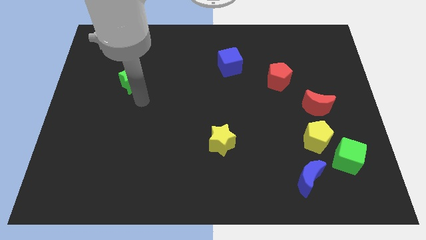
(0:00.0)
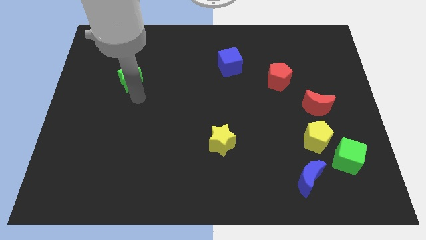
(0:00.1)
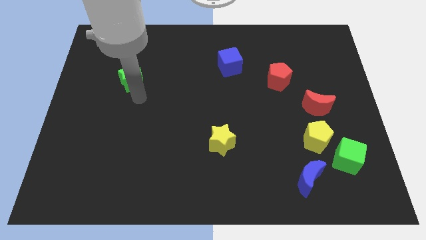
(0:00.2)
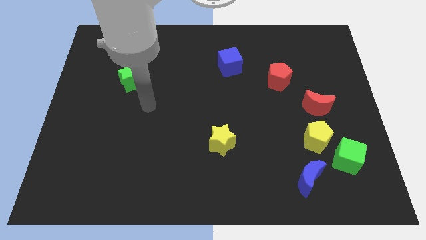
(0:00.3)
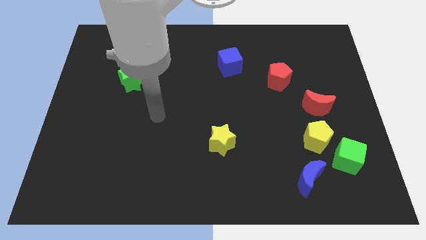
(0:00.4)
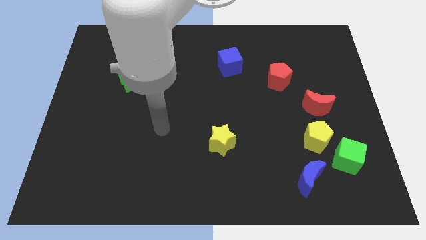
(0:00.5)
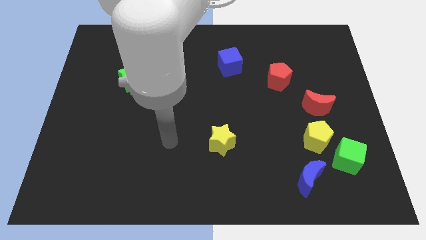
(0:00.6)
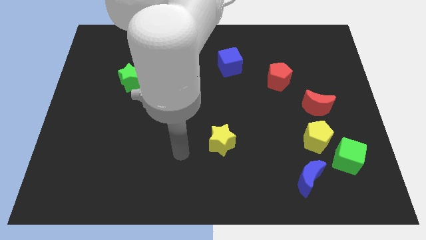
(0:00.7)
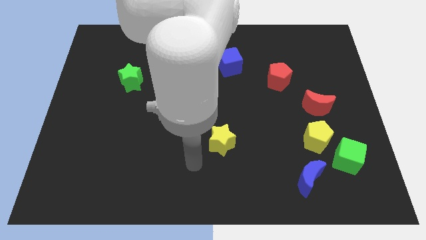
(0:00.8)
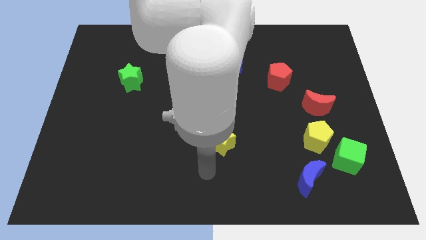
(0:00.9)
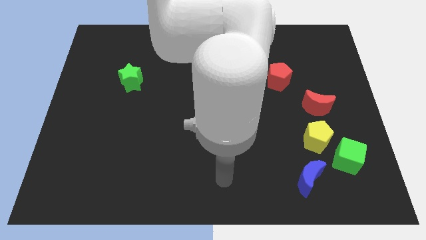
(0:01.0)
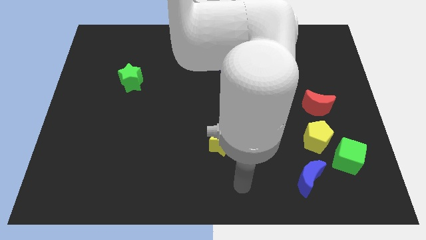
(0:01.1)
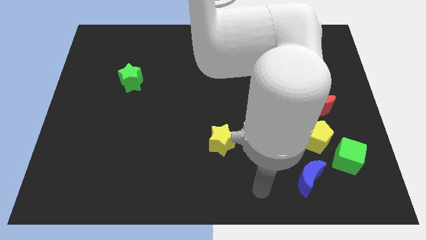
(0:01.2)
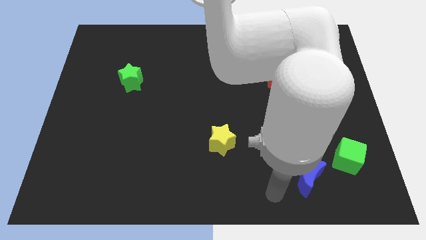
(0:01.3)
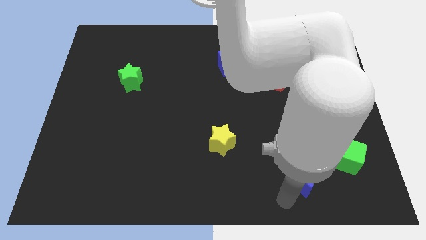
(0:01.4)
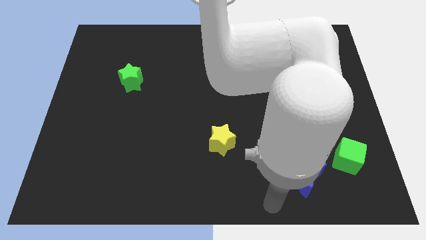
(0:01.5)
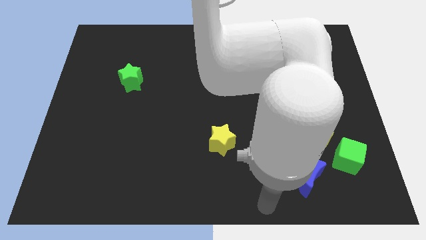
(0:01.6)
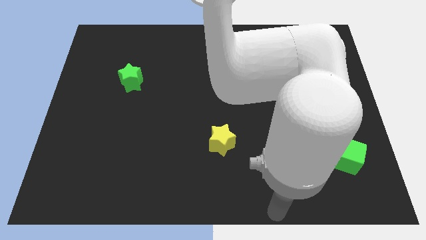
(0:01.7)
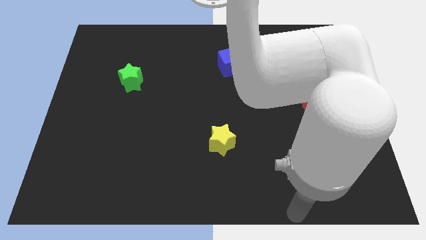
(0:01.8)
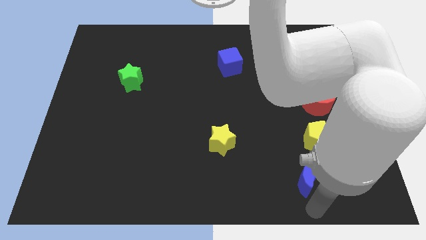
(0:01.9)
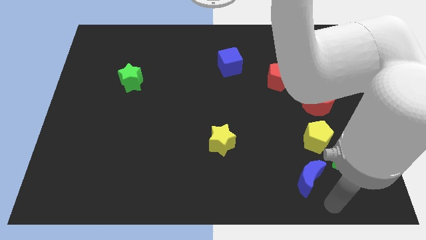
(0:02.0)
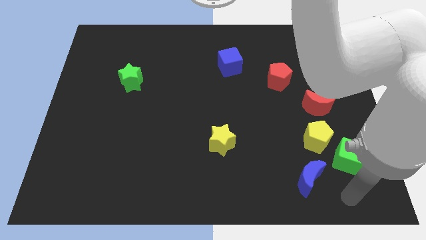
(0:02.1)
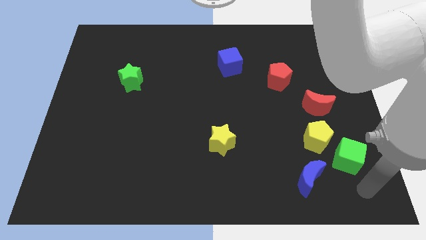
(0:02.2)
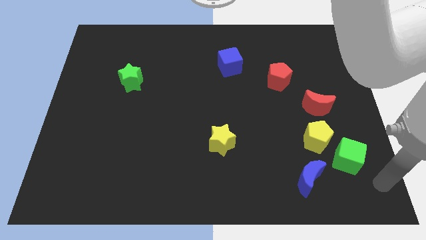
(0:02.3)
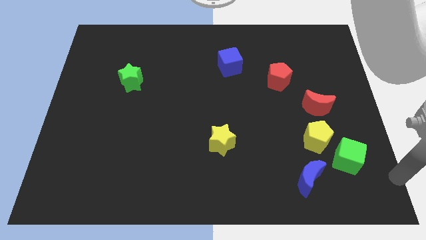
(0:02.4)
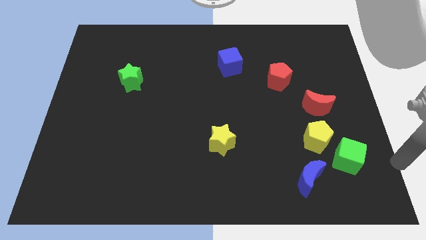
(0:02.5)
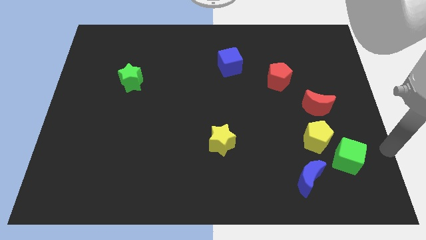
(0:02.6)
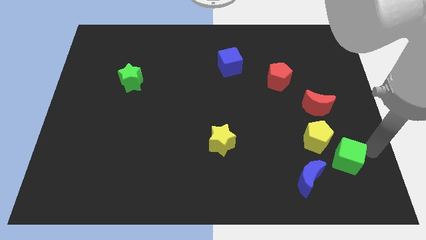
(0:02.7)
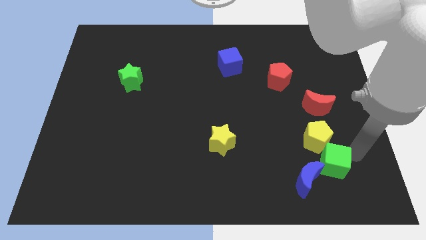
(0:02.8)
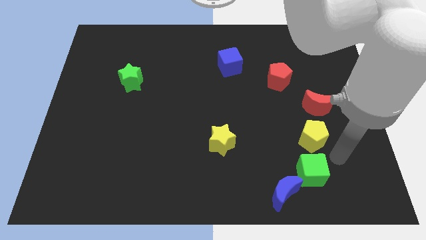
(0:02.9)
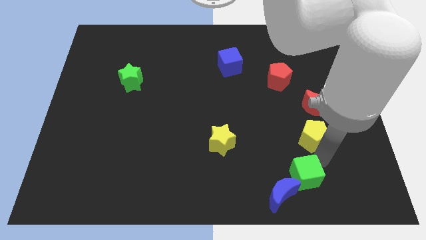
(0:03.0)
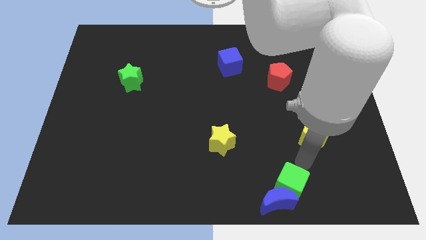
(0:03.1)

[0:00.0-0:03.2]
slide the green cube diagonally bottom left to the yellow pentagon

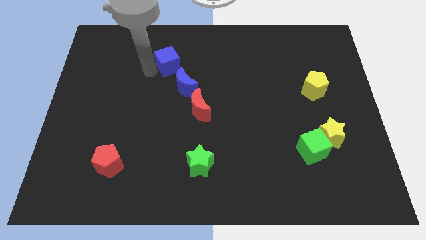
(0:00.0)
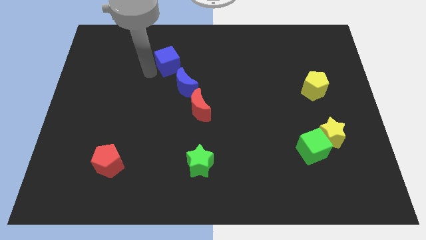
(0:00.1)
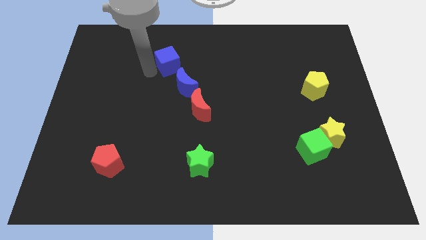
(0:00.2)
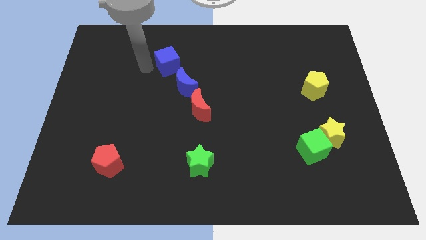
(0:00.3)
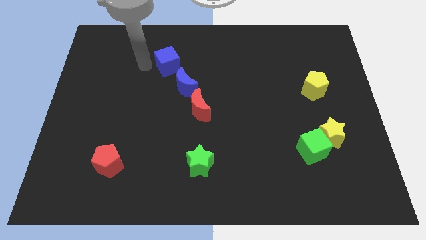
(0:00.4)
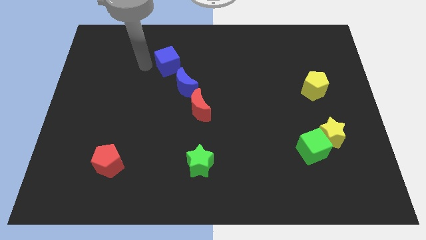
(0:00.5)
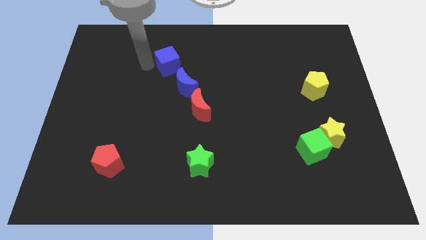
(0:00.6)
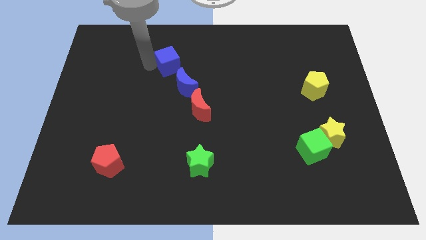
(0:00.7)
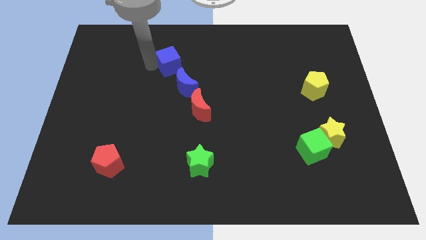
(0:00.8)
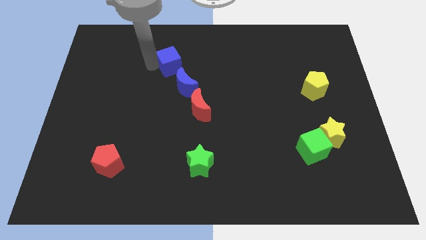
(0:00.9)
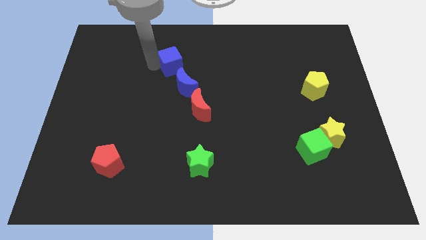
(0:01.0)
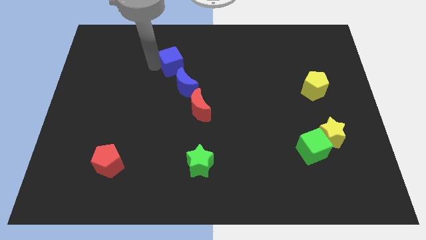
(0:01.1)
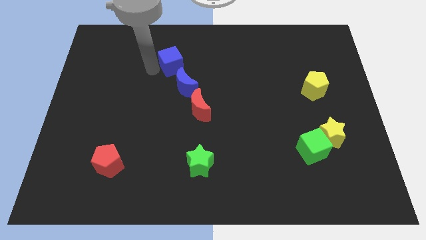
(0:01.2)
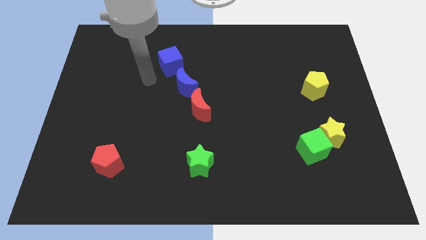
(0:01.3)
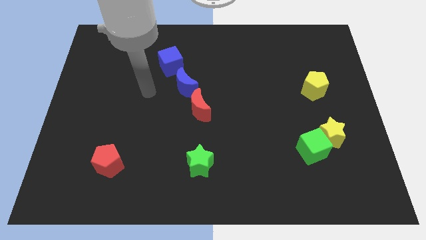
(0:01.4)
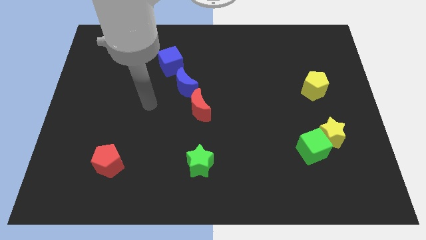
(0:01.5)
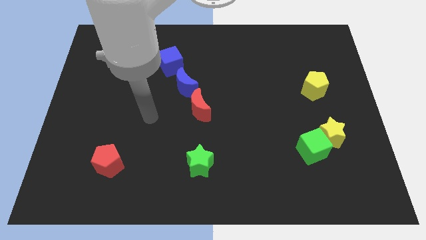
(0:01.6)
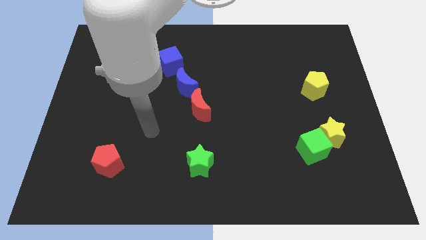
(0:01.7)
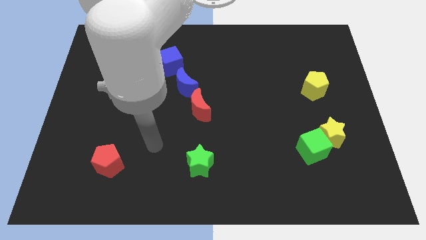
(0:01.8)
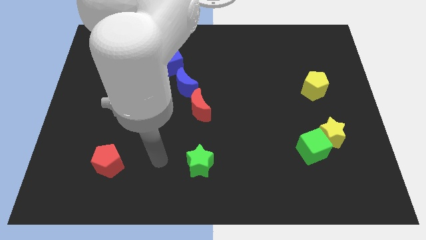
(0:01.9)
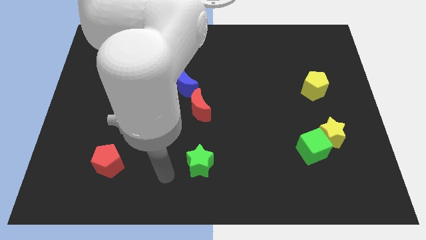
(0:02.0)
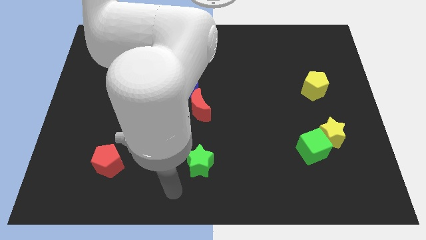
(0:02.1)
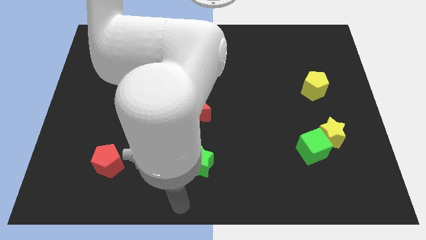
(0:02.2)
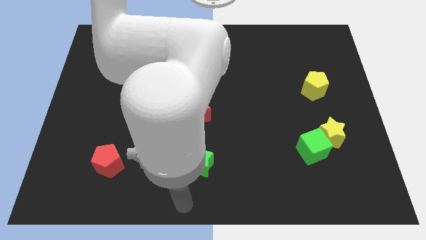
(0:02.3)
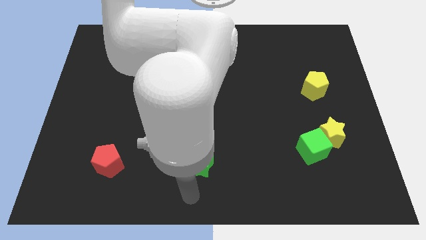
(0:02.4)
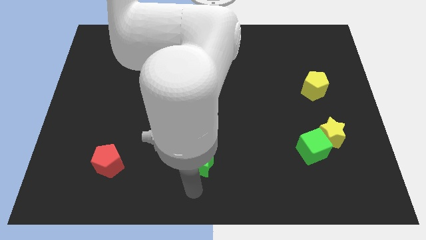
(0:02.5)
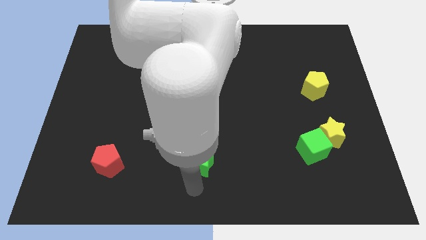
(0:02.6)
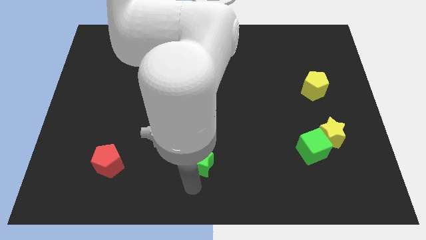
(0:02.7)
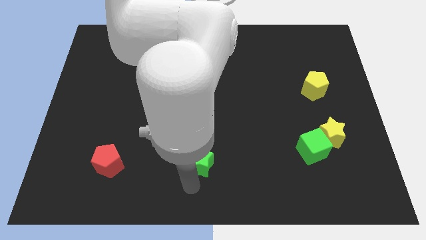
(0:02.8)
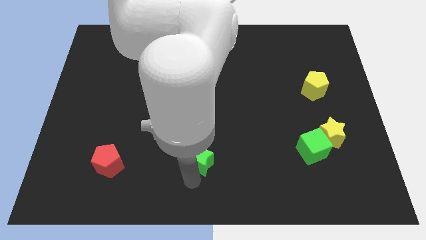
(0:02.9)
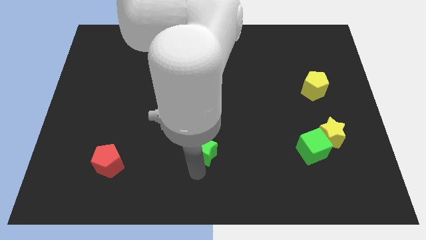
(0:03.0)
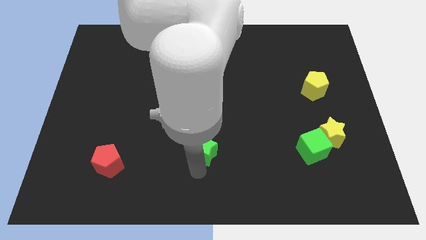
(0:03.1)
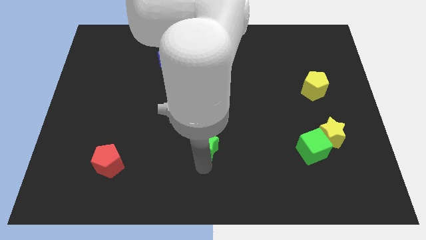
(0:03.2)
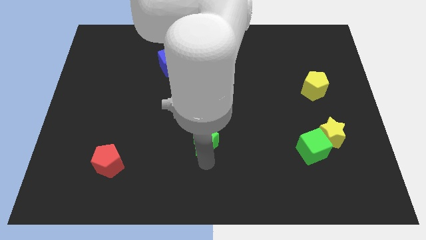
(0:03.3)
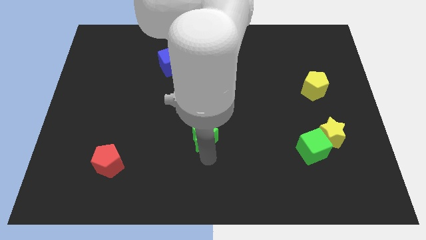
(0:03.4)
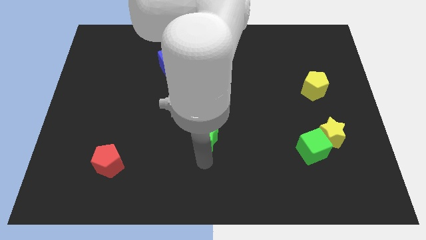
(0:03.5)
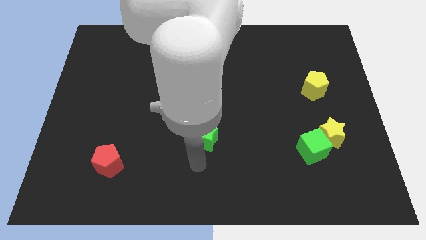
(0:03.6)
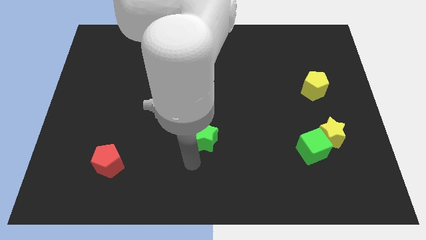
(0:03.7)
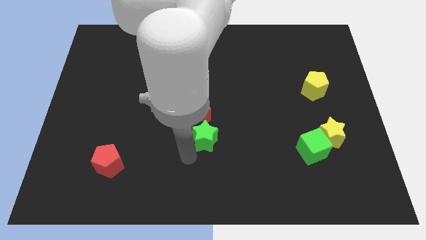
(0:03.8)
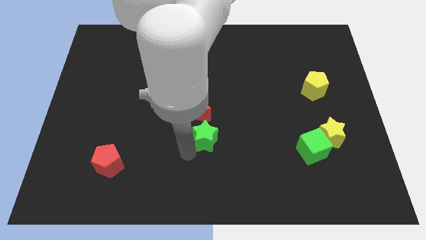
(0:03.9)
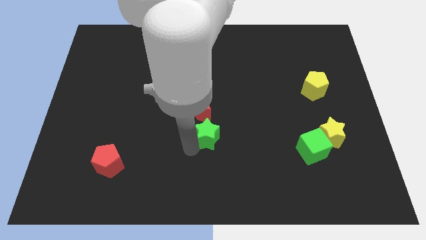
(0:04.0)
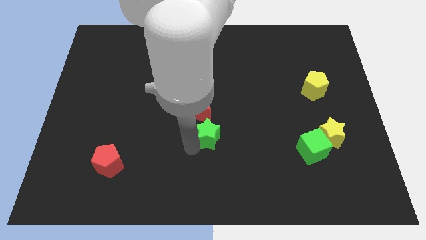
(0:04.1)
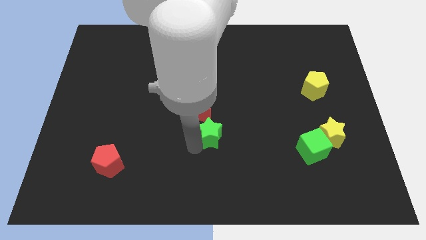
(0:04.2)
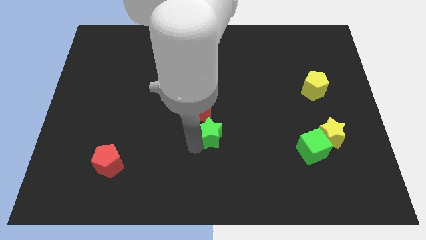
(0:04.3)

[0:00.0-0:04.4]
place the green star to the bottom of the red moon

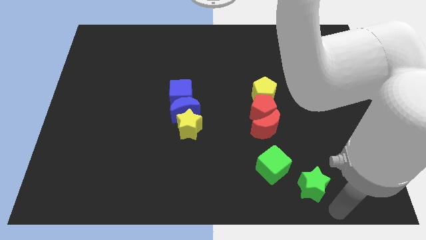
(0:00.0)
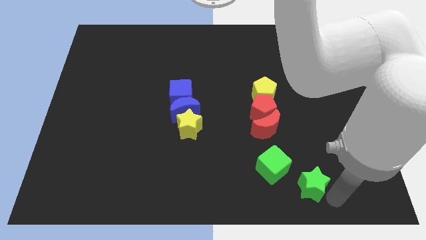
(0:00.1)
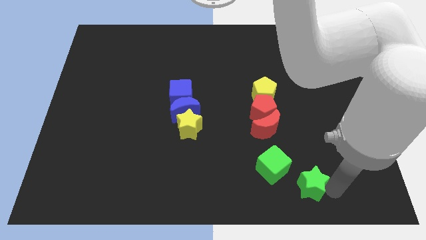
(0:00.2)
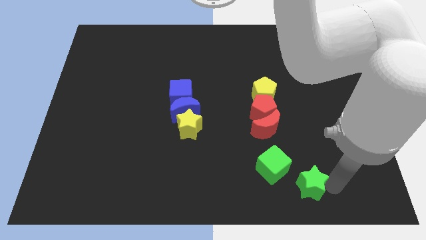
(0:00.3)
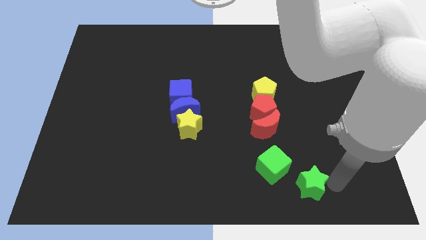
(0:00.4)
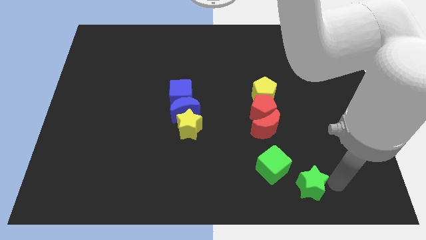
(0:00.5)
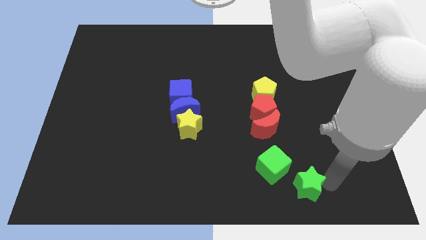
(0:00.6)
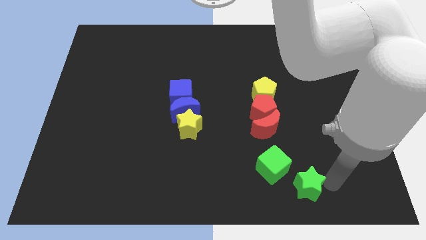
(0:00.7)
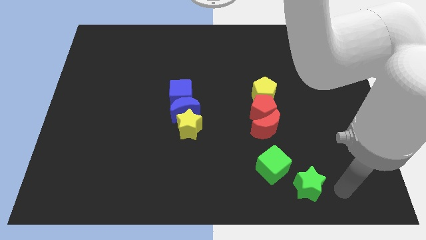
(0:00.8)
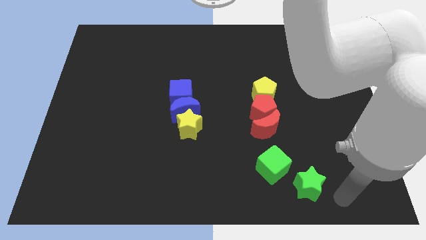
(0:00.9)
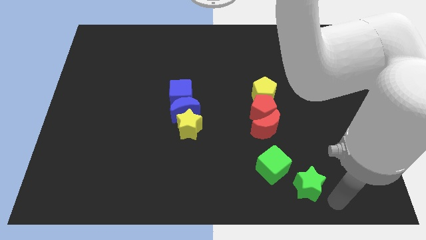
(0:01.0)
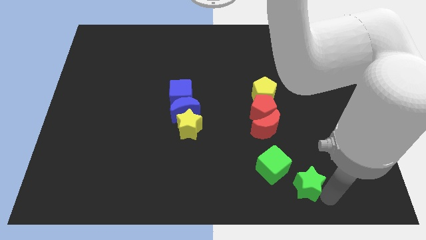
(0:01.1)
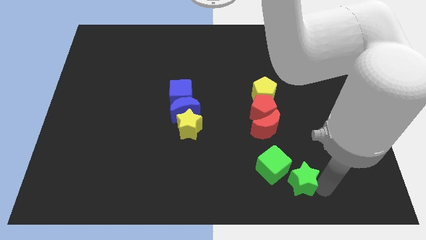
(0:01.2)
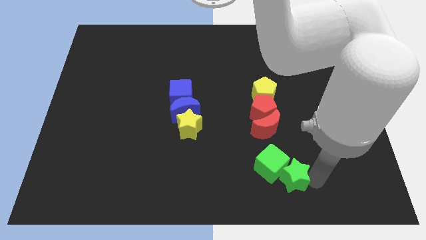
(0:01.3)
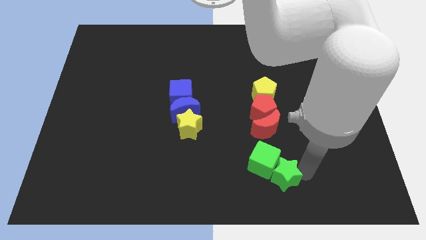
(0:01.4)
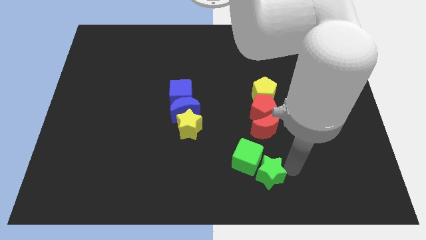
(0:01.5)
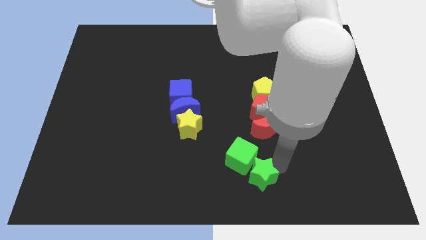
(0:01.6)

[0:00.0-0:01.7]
push green star into green cube
